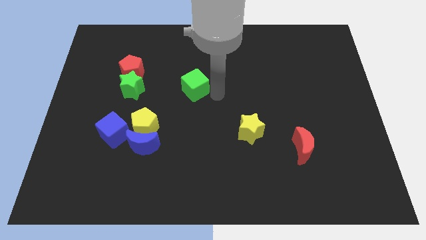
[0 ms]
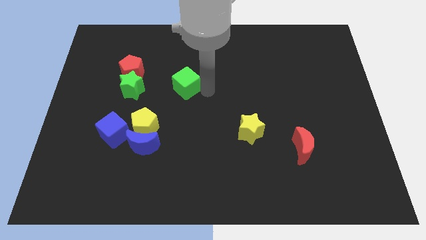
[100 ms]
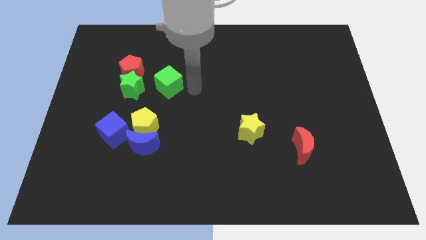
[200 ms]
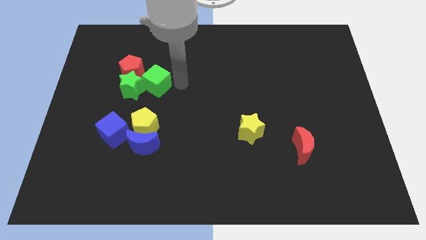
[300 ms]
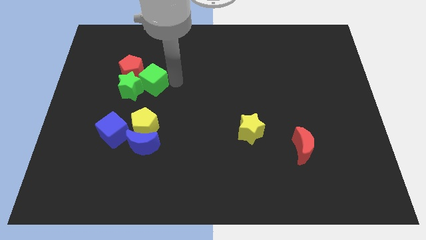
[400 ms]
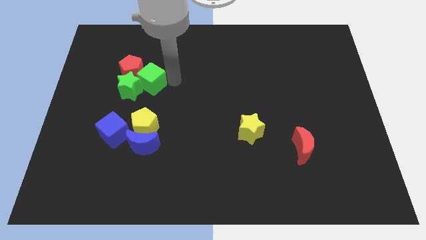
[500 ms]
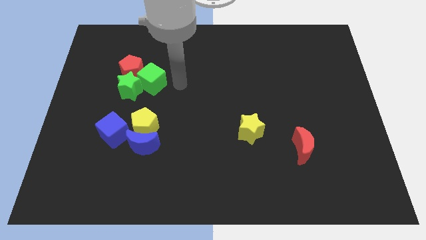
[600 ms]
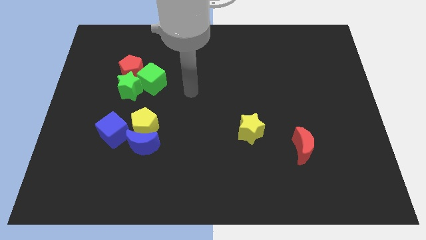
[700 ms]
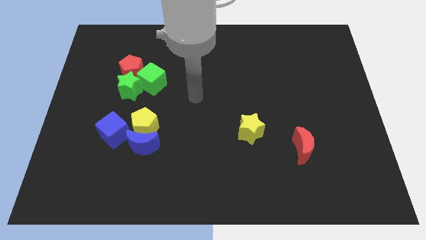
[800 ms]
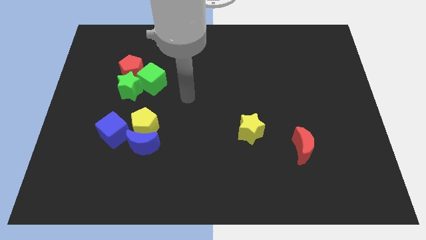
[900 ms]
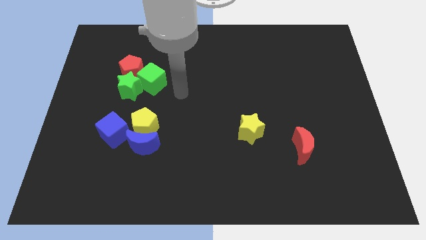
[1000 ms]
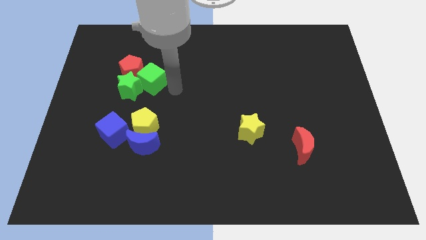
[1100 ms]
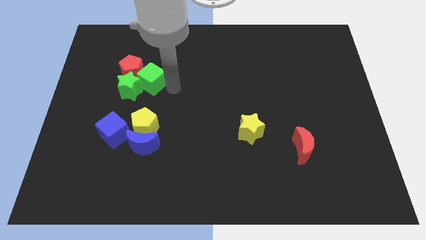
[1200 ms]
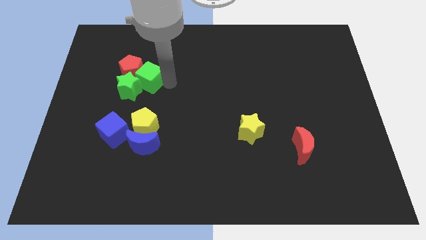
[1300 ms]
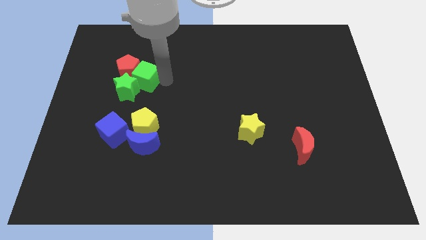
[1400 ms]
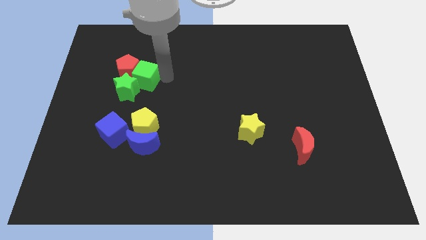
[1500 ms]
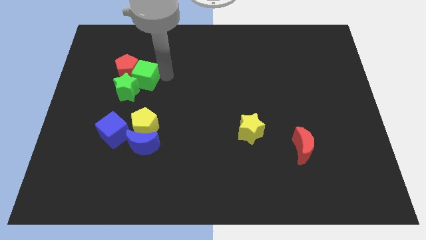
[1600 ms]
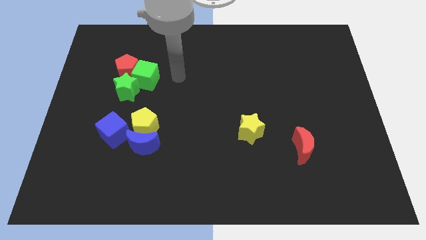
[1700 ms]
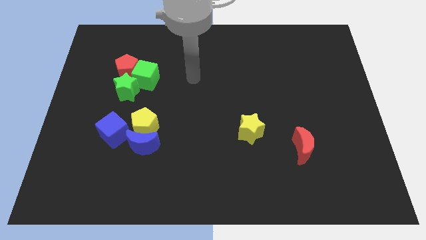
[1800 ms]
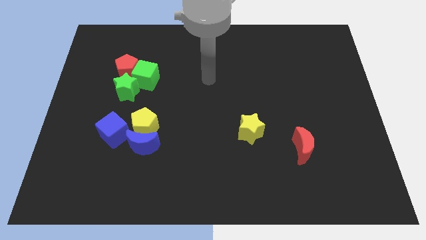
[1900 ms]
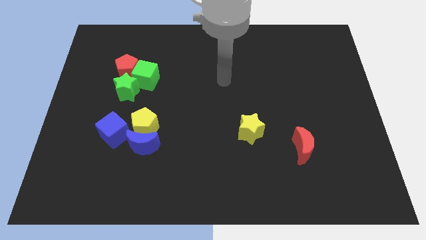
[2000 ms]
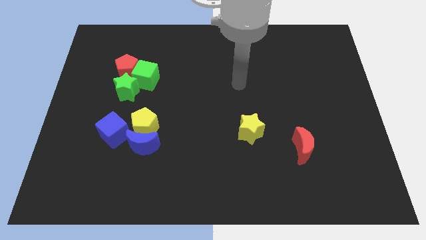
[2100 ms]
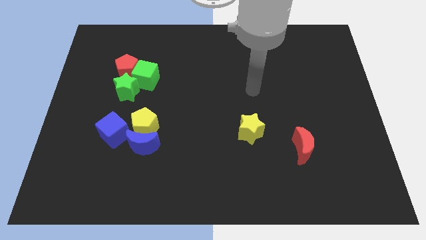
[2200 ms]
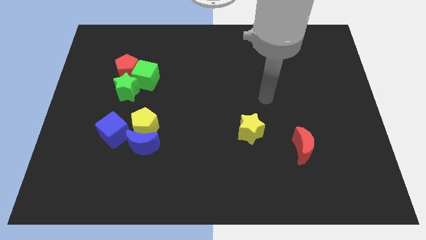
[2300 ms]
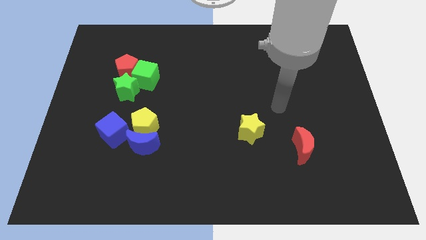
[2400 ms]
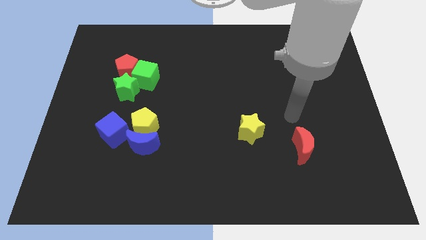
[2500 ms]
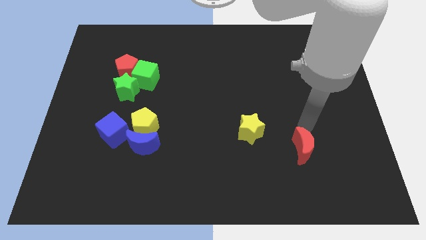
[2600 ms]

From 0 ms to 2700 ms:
slightly move the green cube into the red pentagon and green star

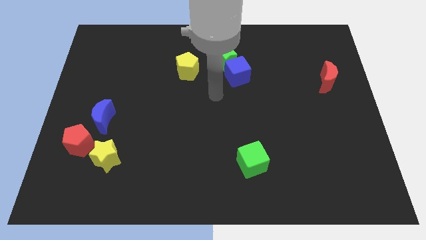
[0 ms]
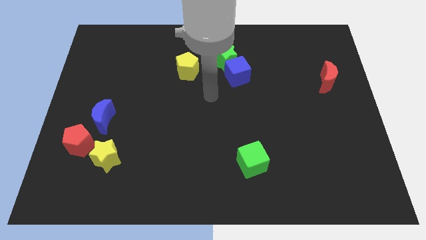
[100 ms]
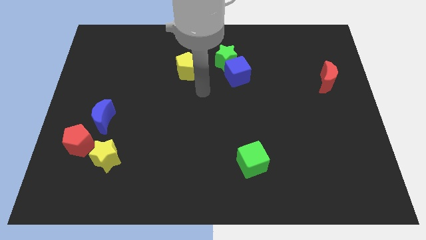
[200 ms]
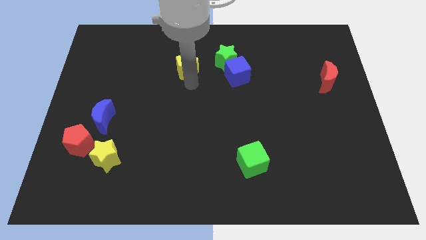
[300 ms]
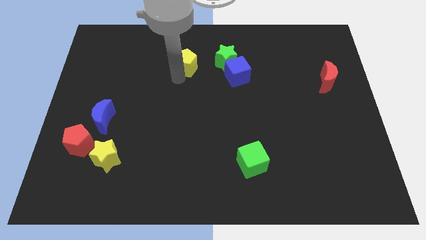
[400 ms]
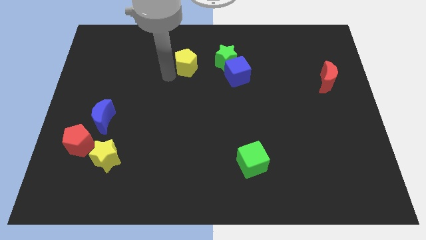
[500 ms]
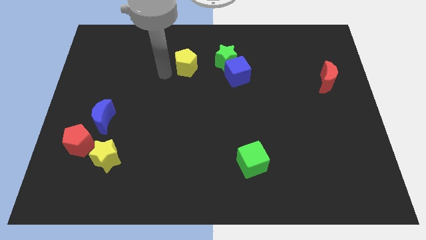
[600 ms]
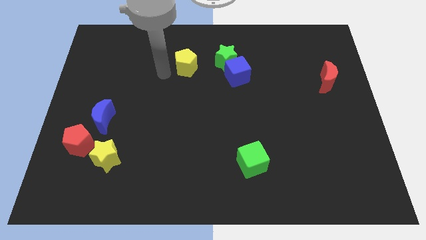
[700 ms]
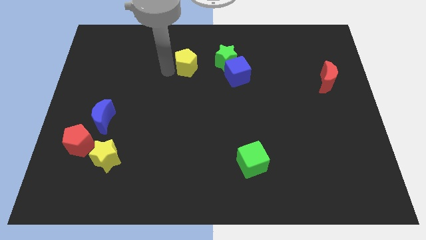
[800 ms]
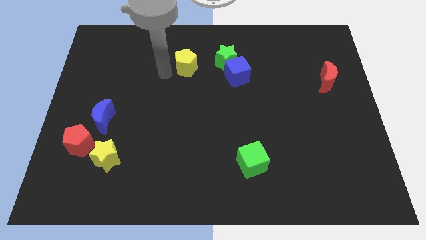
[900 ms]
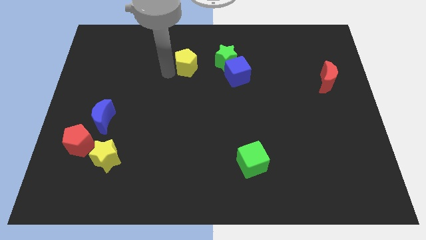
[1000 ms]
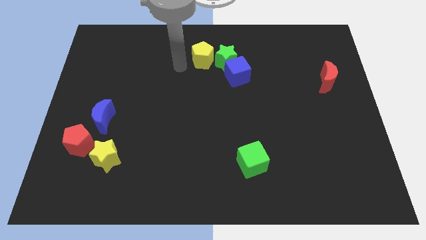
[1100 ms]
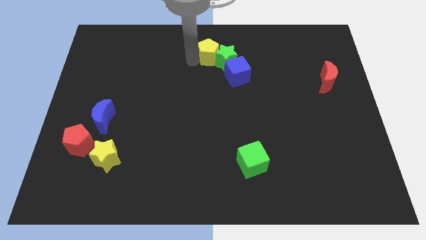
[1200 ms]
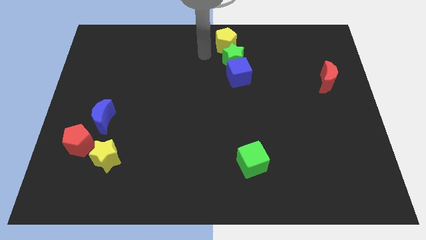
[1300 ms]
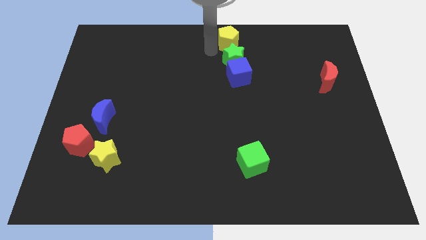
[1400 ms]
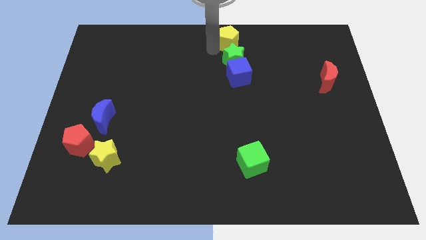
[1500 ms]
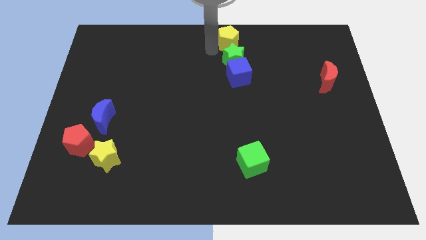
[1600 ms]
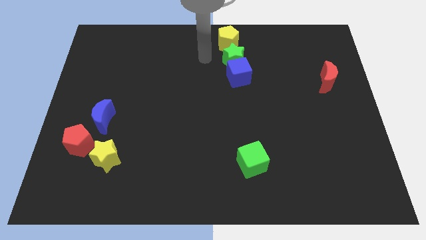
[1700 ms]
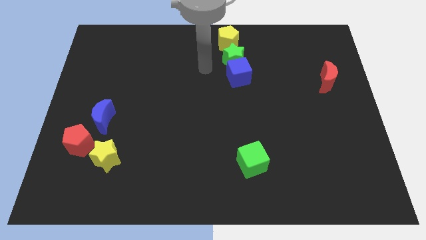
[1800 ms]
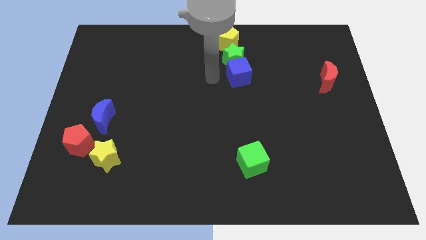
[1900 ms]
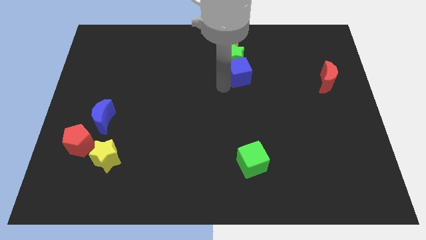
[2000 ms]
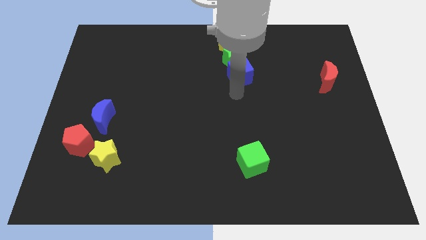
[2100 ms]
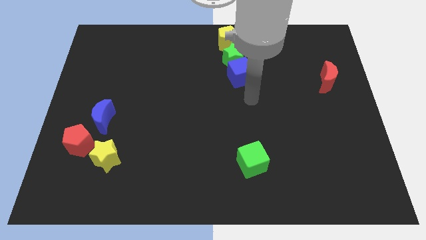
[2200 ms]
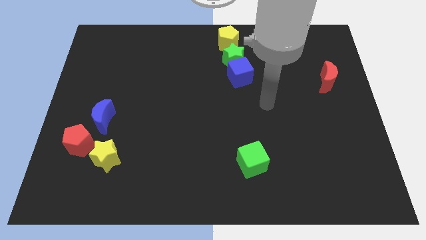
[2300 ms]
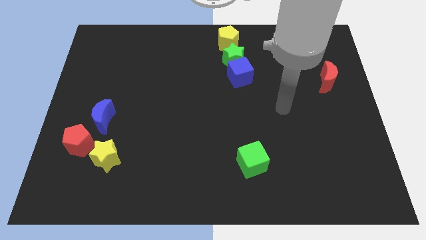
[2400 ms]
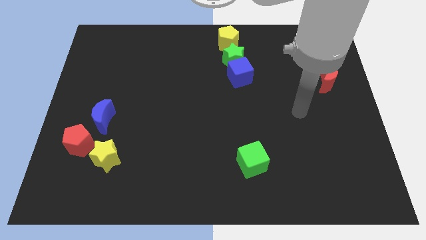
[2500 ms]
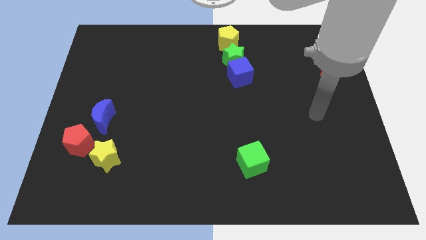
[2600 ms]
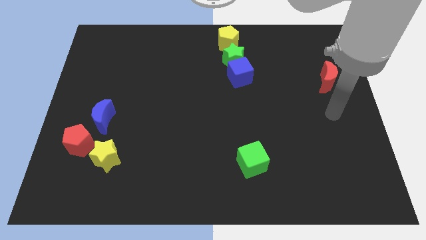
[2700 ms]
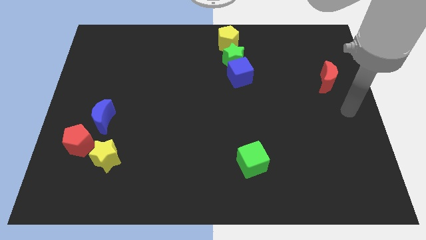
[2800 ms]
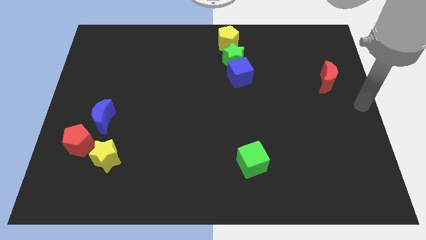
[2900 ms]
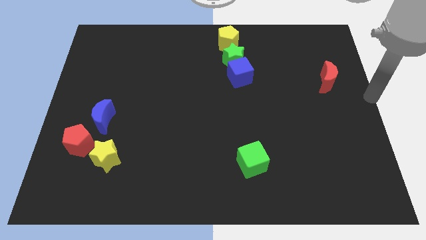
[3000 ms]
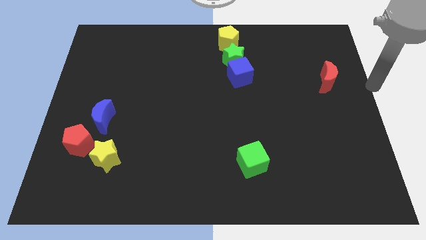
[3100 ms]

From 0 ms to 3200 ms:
place the yellow pentagon at the top center of the board

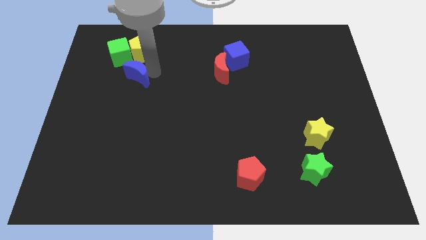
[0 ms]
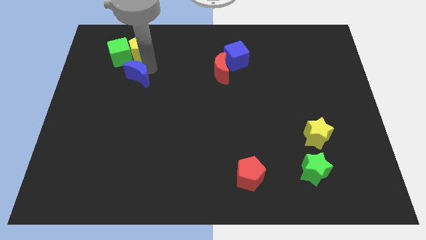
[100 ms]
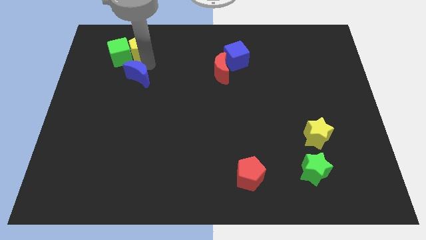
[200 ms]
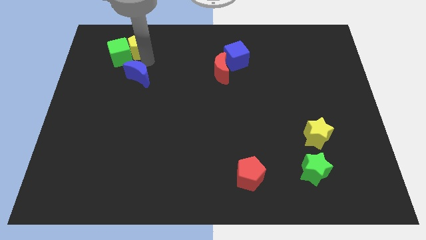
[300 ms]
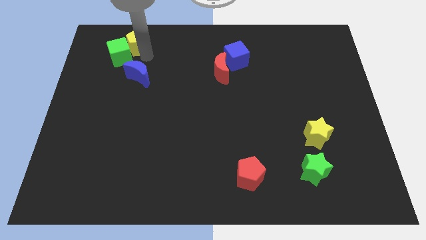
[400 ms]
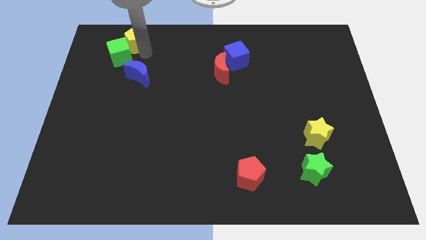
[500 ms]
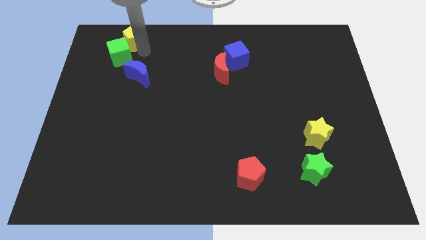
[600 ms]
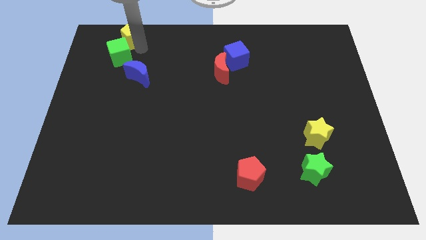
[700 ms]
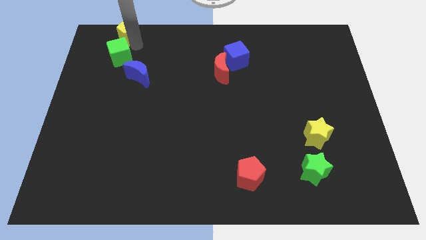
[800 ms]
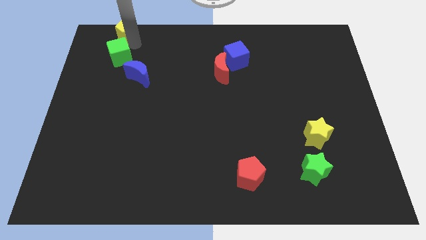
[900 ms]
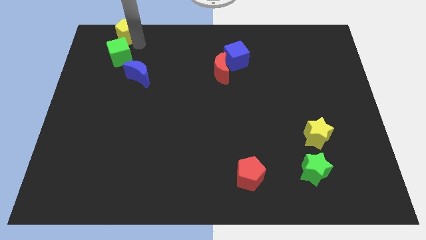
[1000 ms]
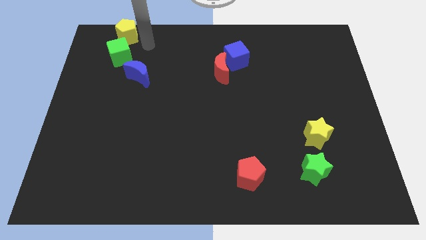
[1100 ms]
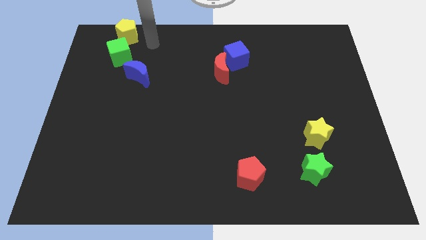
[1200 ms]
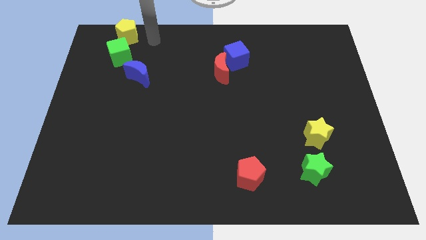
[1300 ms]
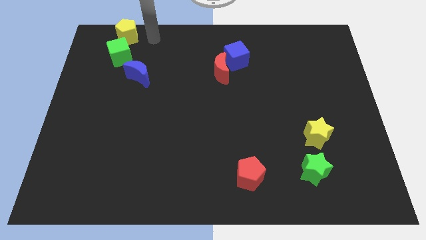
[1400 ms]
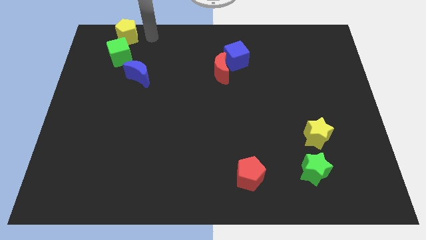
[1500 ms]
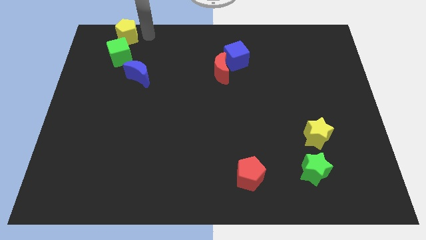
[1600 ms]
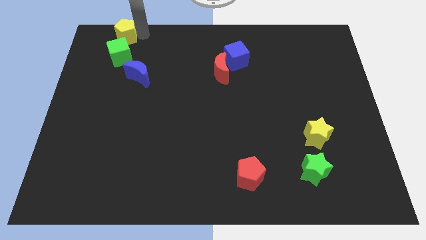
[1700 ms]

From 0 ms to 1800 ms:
place the yellow pentagon above the green cube

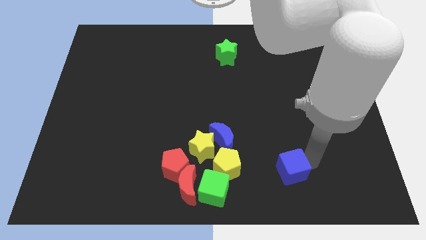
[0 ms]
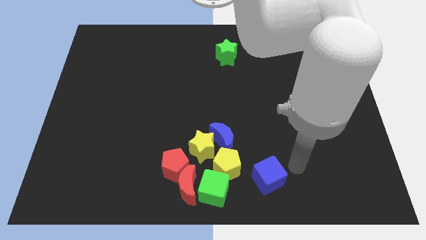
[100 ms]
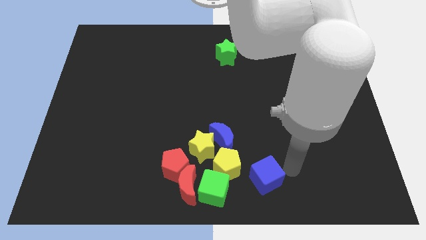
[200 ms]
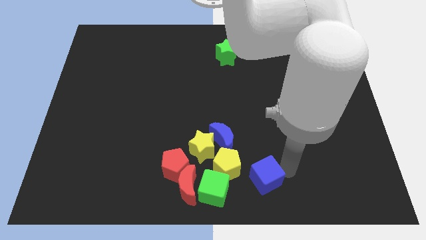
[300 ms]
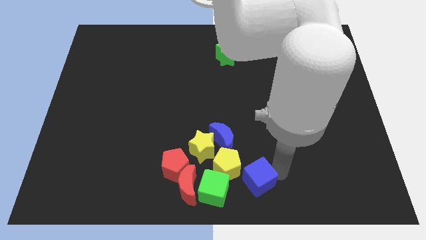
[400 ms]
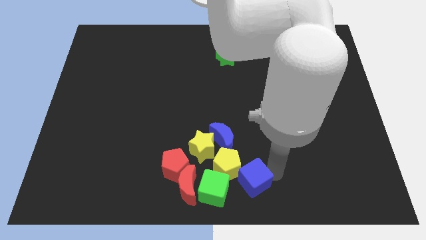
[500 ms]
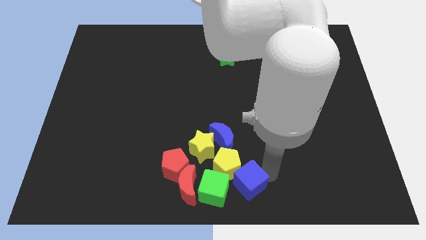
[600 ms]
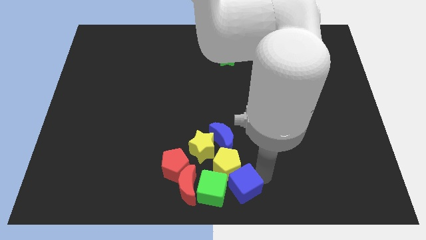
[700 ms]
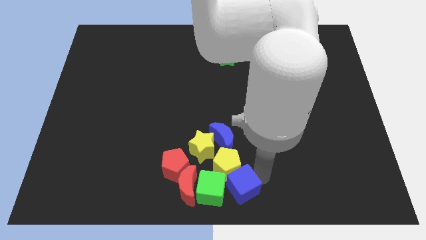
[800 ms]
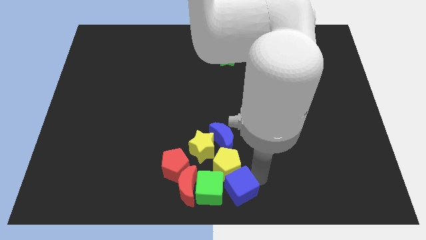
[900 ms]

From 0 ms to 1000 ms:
move the blue cube into a group of blocks

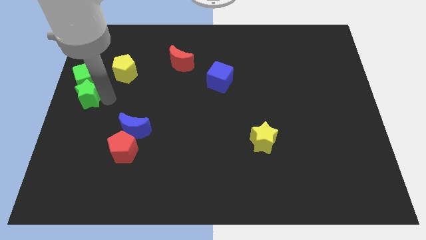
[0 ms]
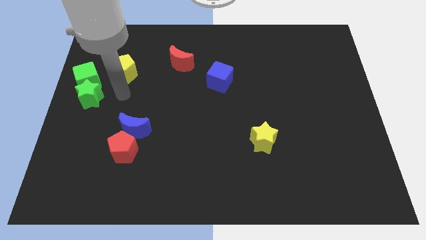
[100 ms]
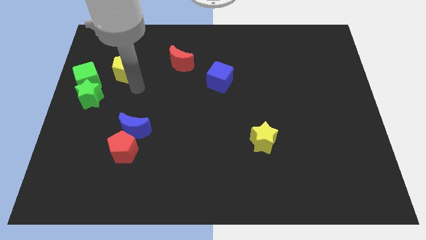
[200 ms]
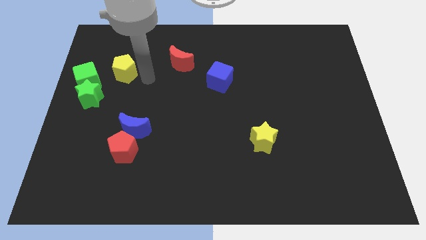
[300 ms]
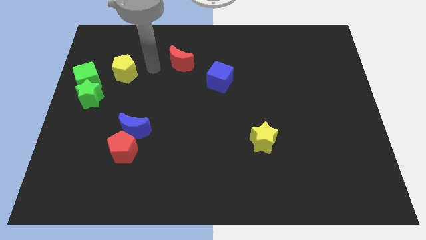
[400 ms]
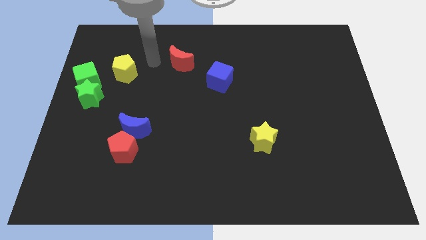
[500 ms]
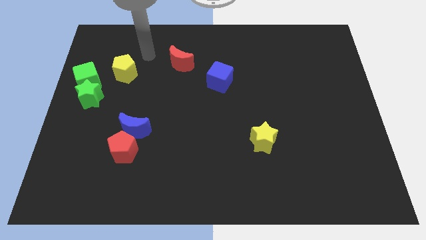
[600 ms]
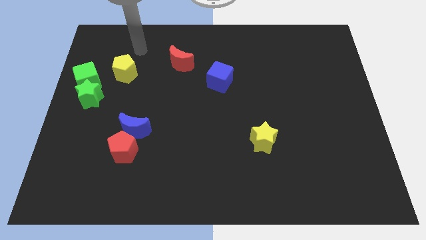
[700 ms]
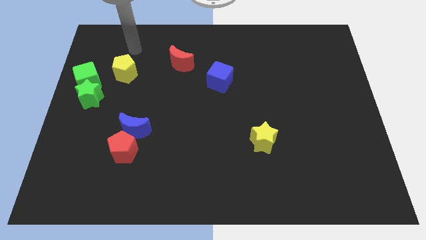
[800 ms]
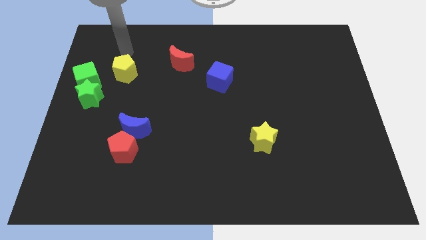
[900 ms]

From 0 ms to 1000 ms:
go away from the green star
